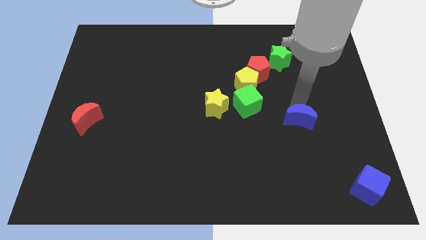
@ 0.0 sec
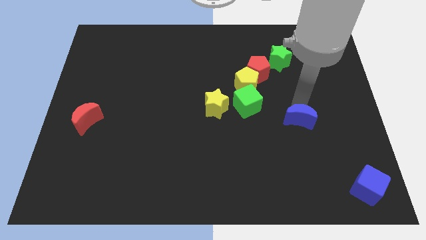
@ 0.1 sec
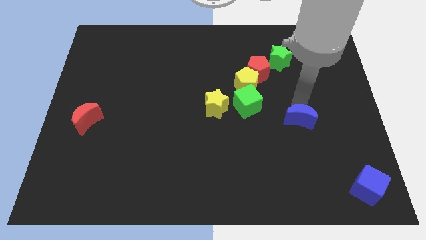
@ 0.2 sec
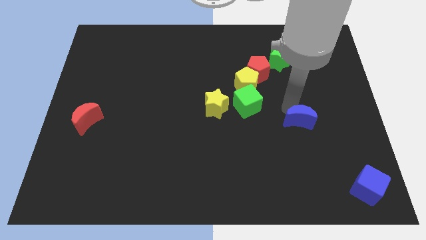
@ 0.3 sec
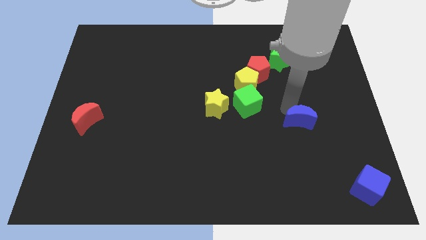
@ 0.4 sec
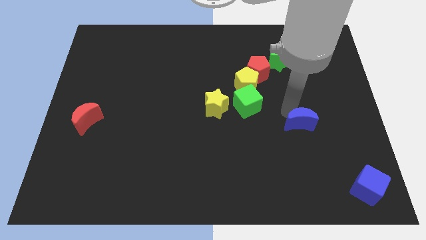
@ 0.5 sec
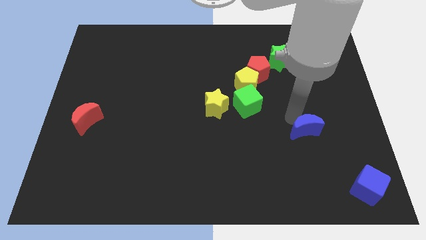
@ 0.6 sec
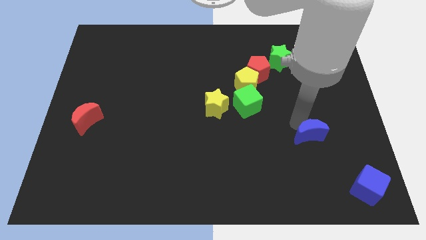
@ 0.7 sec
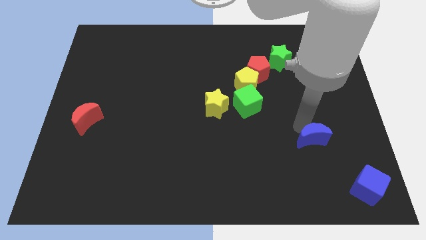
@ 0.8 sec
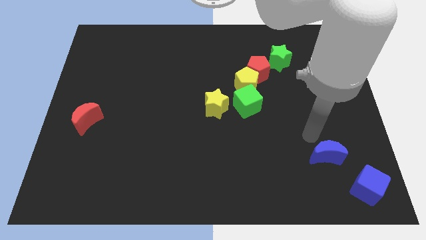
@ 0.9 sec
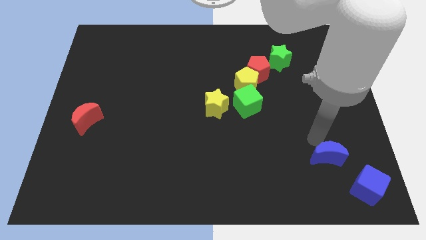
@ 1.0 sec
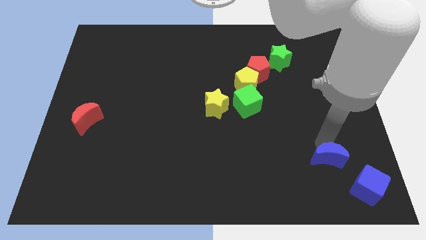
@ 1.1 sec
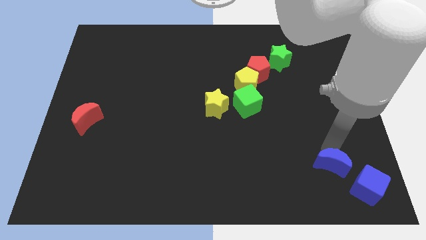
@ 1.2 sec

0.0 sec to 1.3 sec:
push blue moon slightly downwards

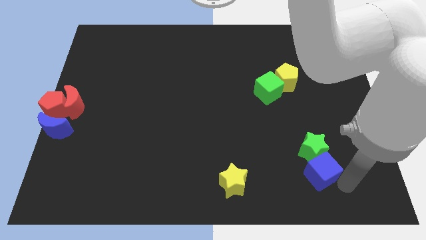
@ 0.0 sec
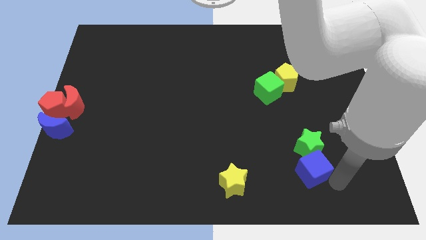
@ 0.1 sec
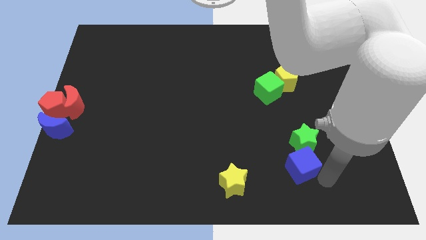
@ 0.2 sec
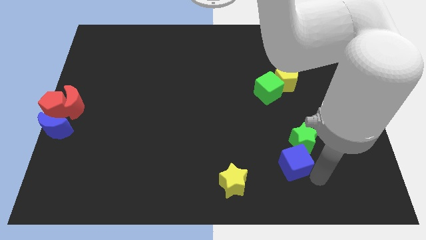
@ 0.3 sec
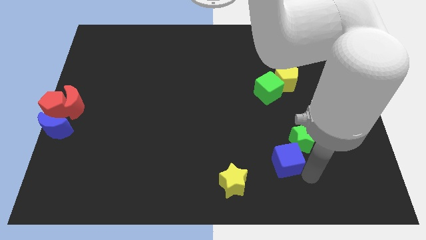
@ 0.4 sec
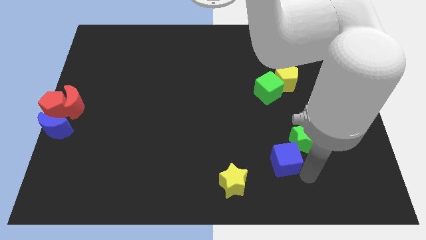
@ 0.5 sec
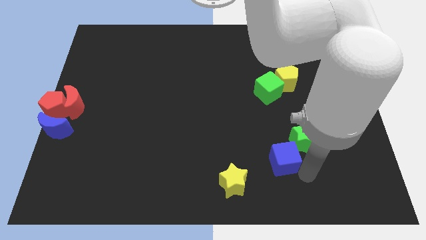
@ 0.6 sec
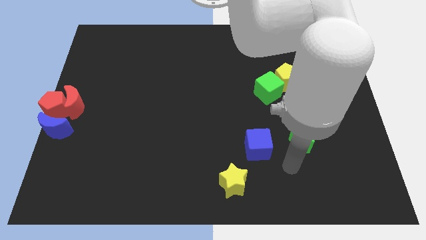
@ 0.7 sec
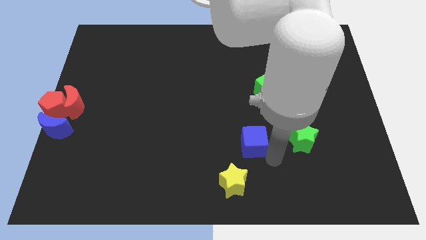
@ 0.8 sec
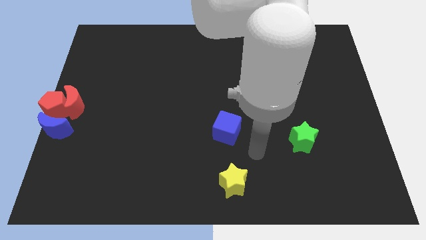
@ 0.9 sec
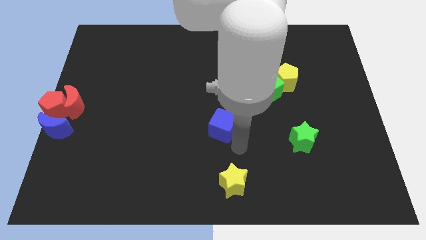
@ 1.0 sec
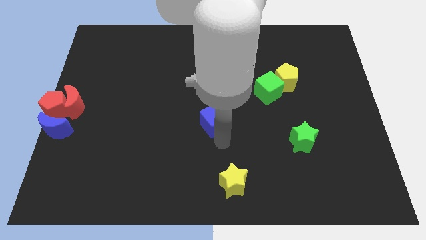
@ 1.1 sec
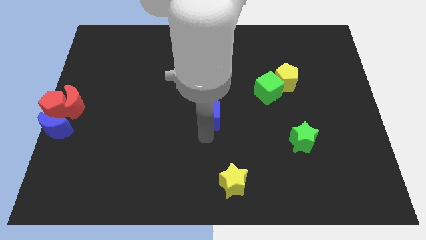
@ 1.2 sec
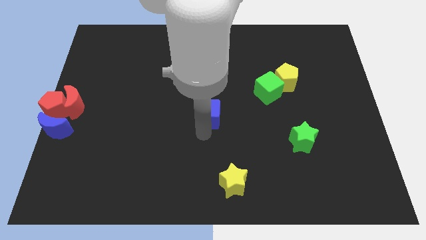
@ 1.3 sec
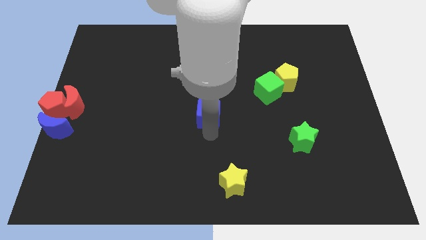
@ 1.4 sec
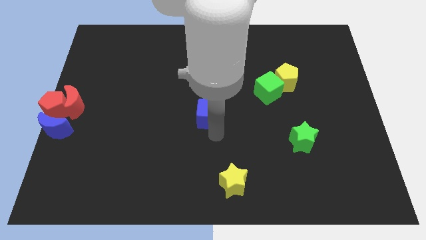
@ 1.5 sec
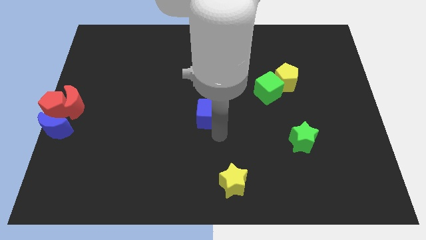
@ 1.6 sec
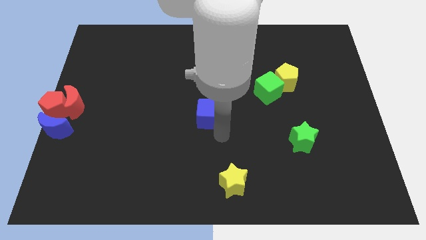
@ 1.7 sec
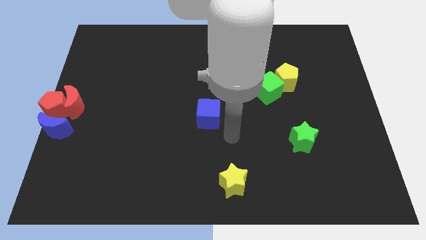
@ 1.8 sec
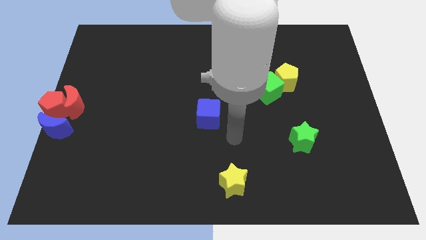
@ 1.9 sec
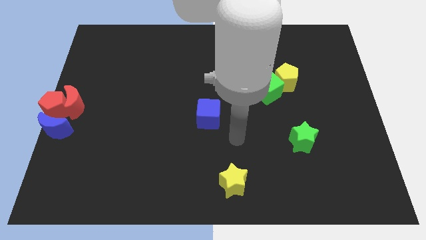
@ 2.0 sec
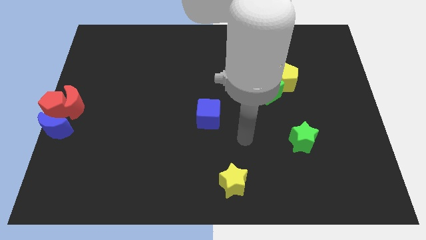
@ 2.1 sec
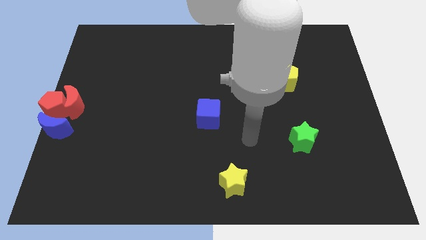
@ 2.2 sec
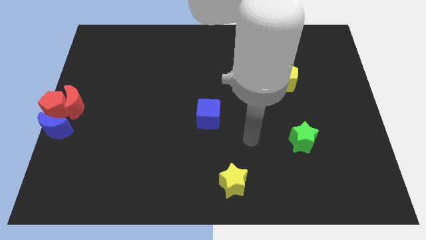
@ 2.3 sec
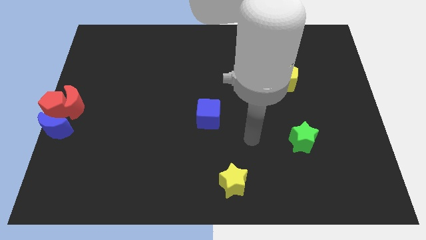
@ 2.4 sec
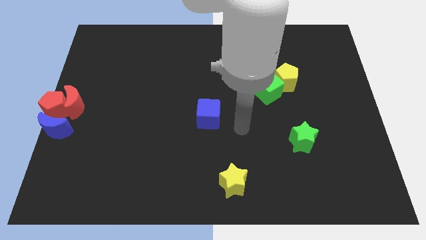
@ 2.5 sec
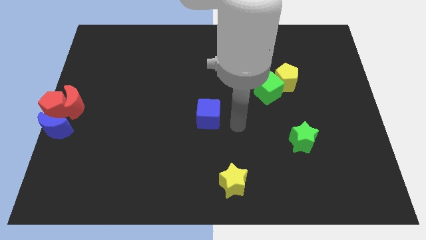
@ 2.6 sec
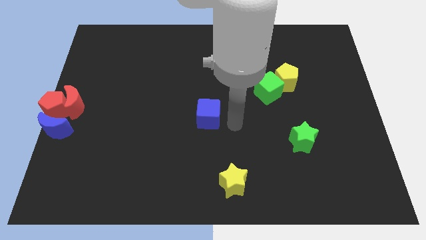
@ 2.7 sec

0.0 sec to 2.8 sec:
move blue cube to the center of the board

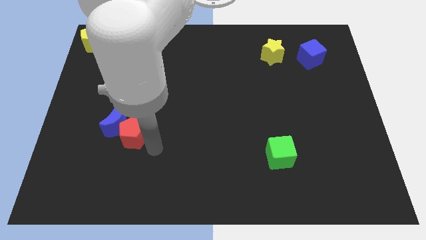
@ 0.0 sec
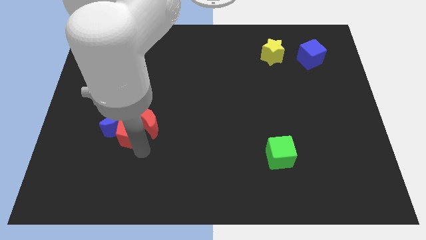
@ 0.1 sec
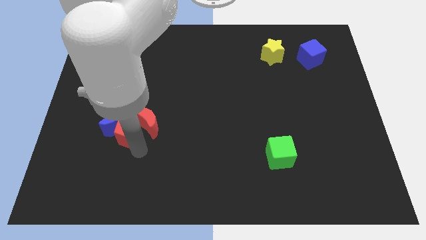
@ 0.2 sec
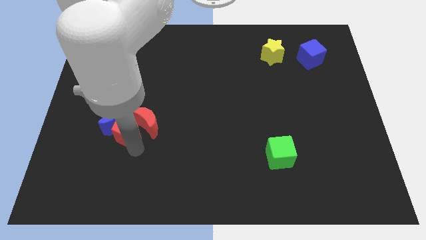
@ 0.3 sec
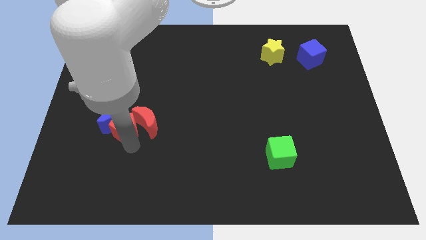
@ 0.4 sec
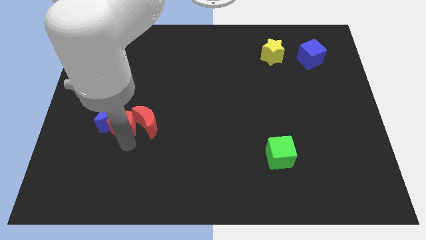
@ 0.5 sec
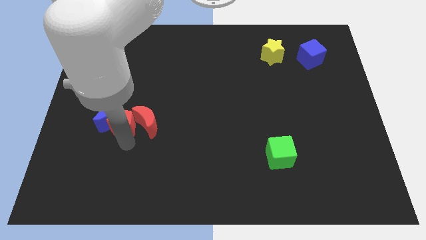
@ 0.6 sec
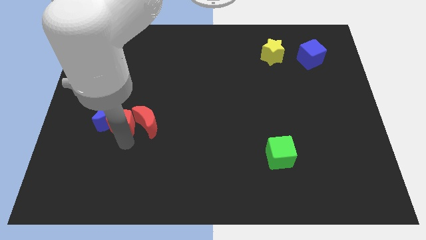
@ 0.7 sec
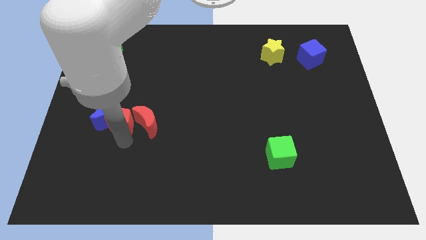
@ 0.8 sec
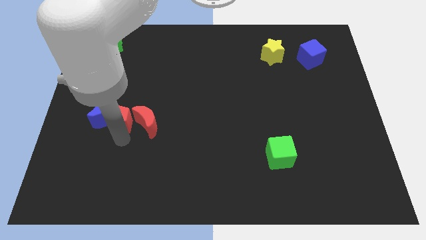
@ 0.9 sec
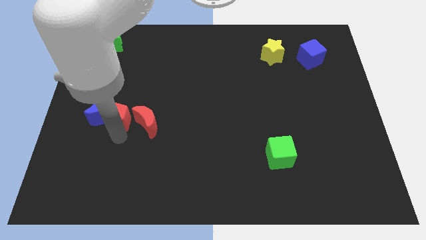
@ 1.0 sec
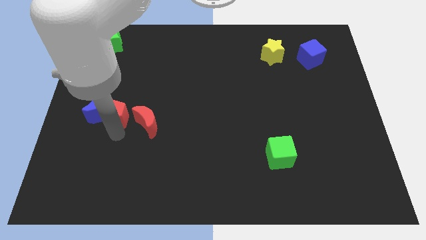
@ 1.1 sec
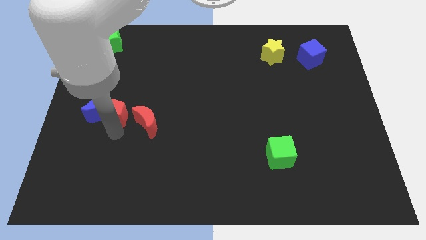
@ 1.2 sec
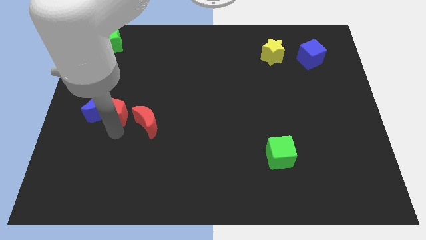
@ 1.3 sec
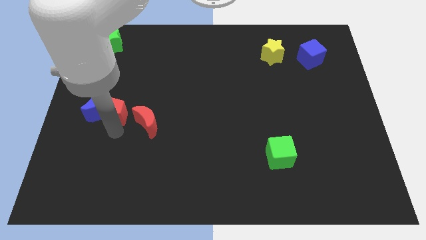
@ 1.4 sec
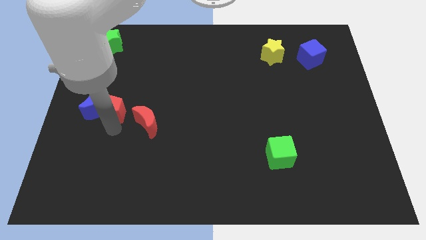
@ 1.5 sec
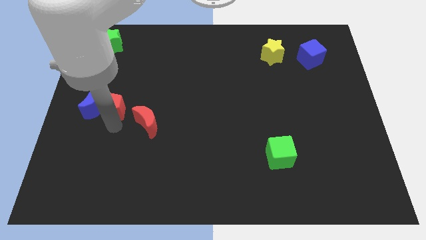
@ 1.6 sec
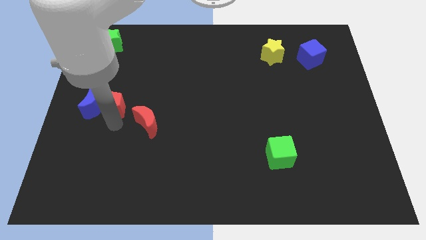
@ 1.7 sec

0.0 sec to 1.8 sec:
place the red pentagon in the middle of blue moon and red moon

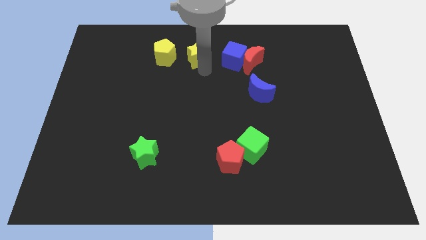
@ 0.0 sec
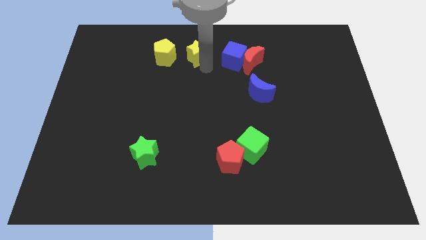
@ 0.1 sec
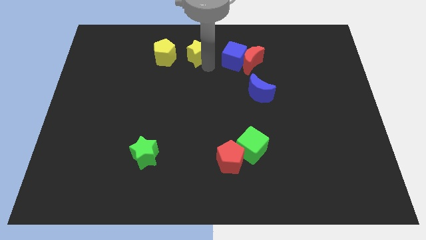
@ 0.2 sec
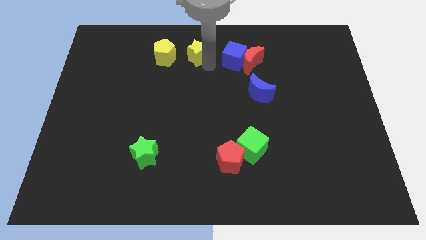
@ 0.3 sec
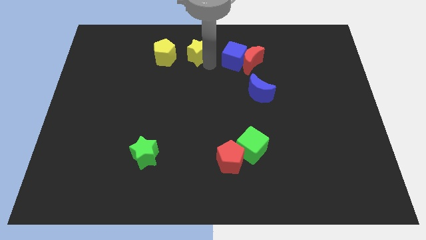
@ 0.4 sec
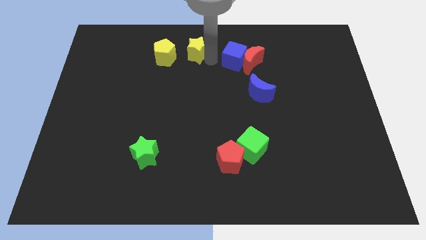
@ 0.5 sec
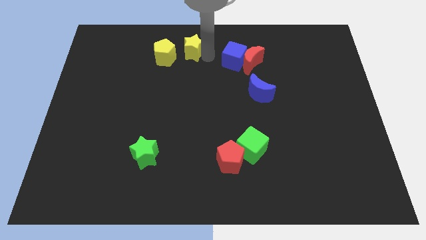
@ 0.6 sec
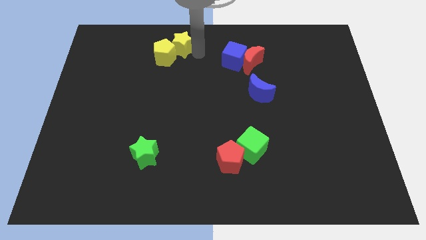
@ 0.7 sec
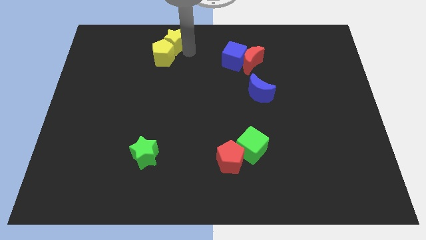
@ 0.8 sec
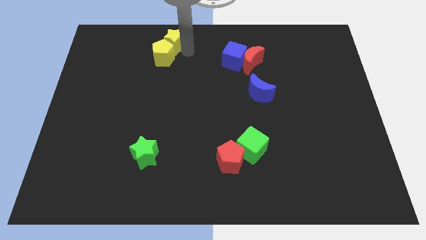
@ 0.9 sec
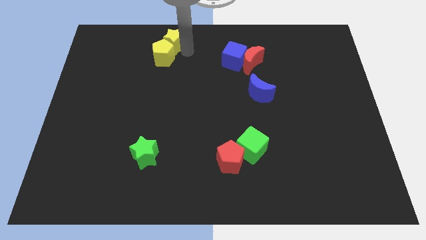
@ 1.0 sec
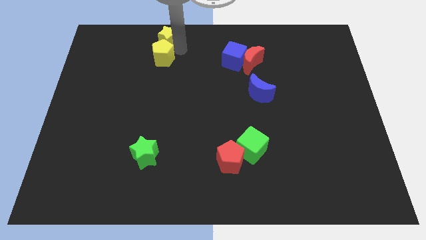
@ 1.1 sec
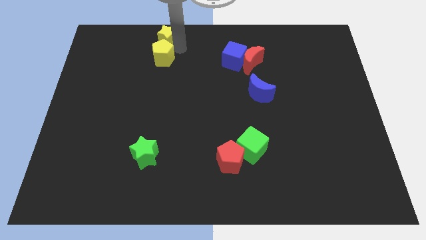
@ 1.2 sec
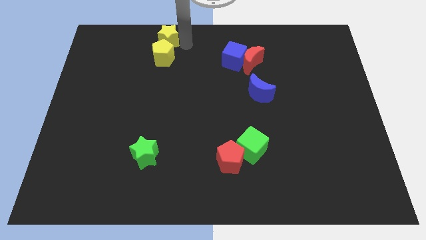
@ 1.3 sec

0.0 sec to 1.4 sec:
place the yellow star above yellow pentagon

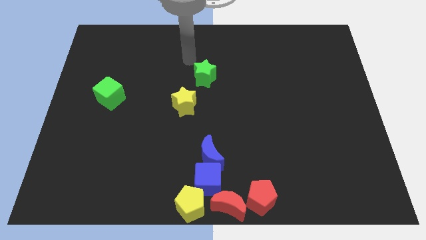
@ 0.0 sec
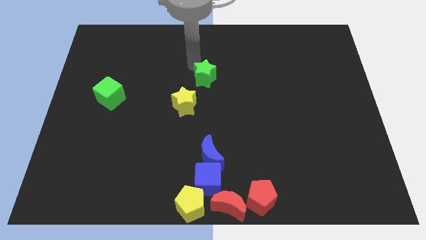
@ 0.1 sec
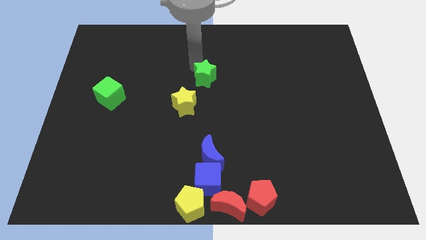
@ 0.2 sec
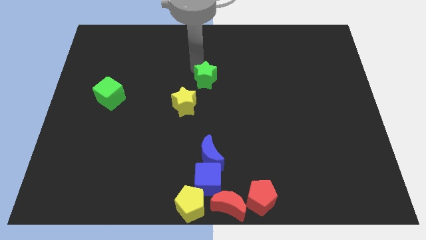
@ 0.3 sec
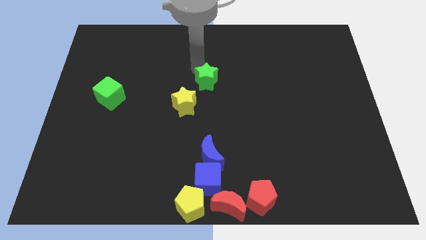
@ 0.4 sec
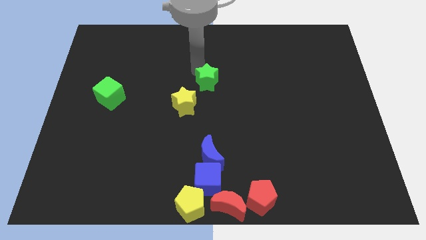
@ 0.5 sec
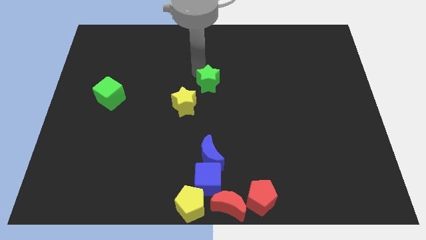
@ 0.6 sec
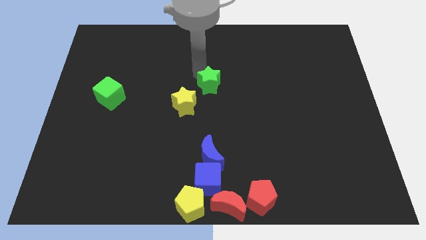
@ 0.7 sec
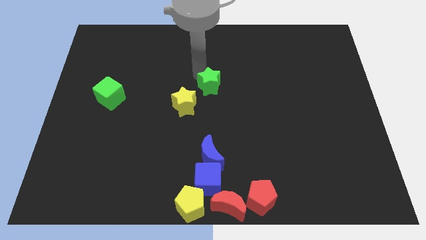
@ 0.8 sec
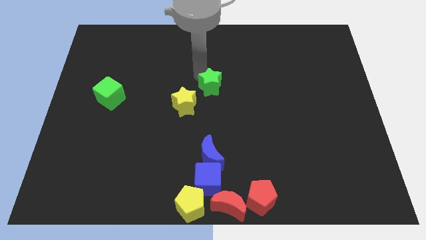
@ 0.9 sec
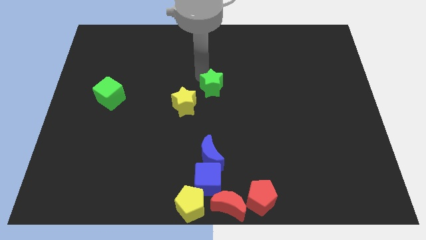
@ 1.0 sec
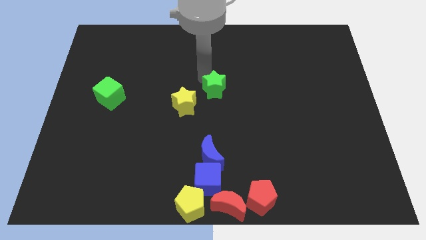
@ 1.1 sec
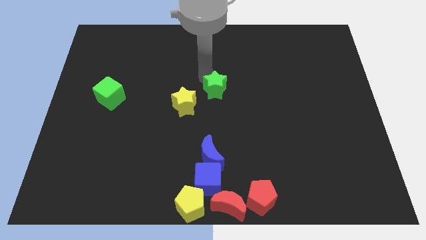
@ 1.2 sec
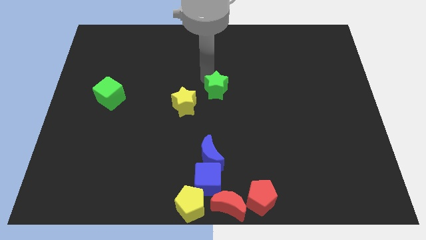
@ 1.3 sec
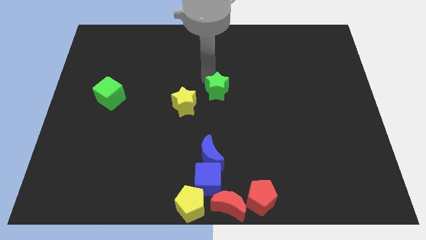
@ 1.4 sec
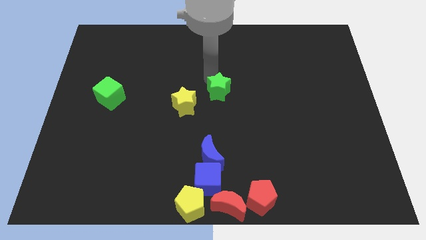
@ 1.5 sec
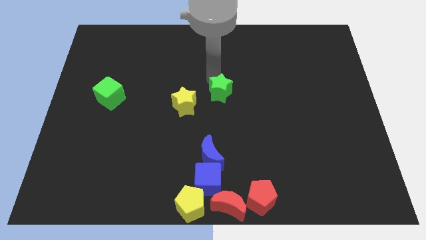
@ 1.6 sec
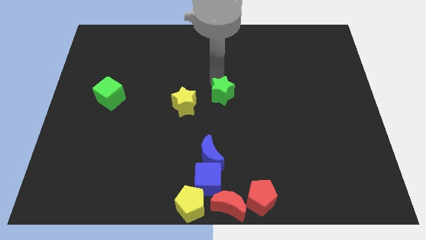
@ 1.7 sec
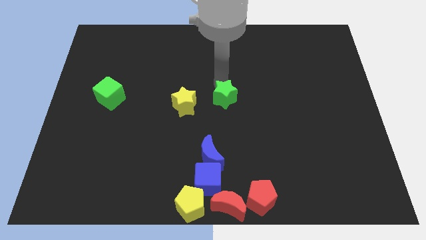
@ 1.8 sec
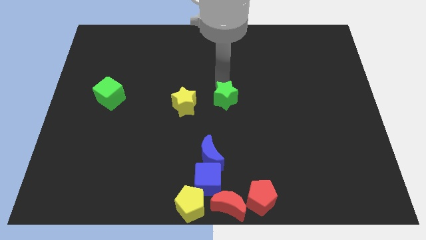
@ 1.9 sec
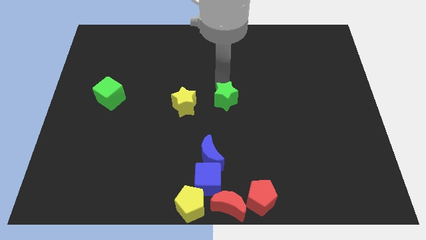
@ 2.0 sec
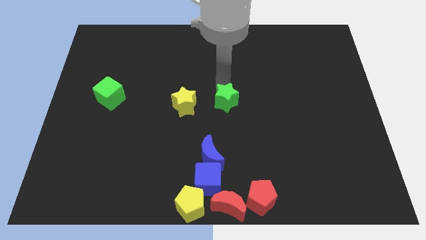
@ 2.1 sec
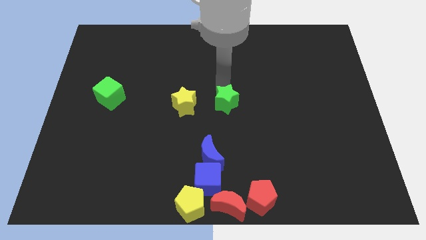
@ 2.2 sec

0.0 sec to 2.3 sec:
put the green star to the right side of the yellow star
